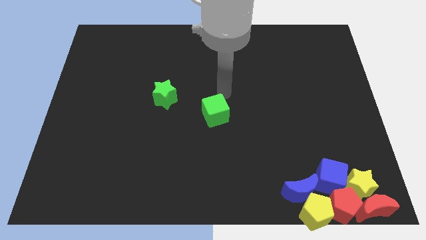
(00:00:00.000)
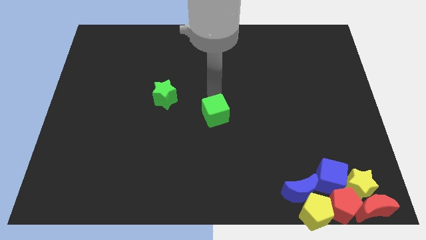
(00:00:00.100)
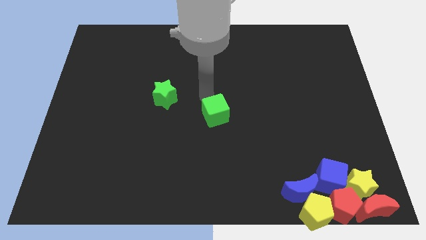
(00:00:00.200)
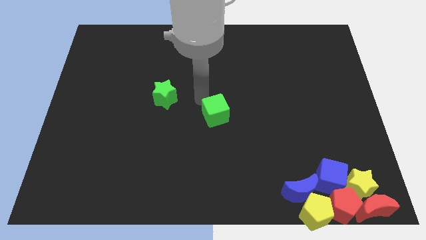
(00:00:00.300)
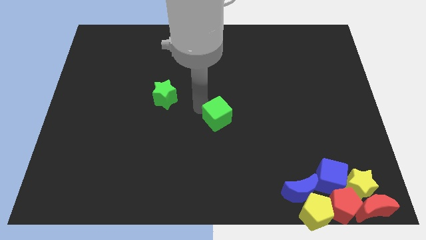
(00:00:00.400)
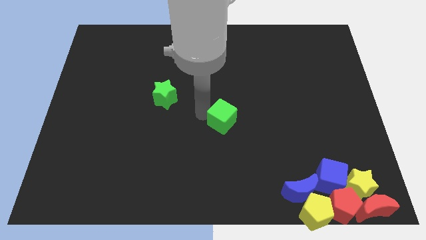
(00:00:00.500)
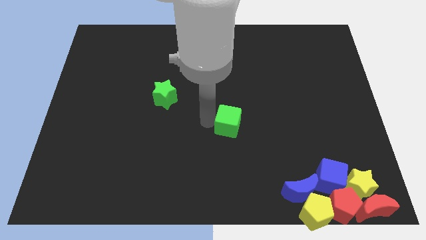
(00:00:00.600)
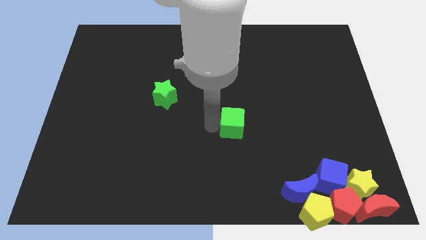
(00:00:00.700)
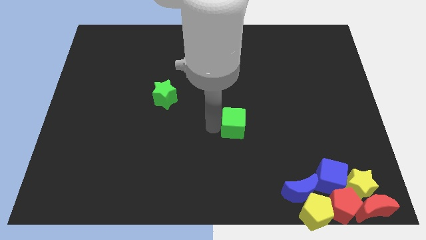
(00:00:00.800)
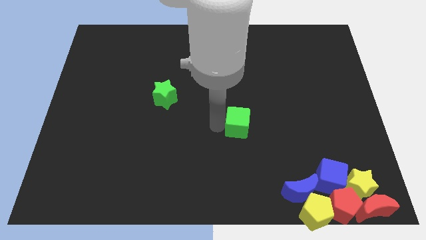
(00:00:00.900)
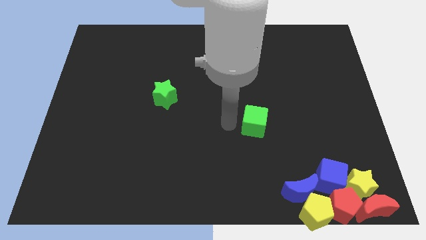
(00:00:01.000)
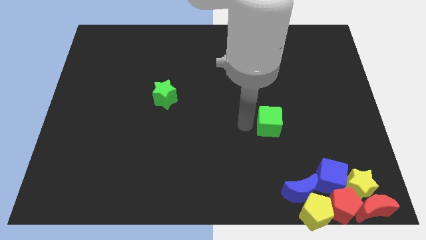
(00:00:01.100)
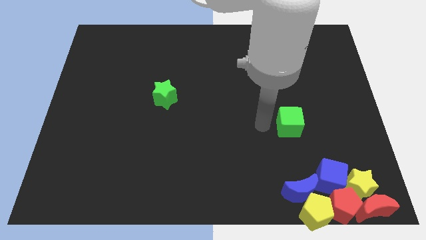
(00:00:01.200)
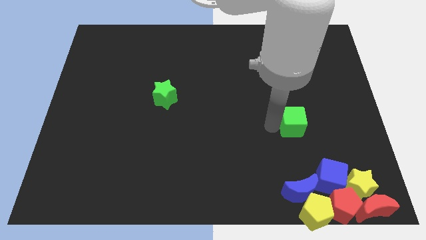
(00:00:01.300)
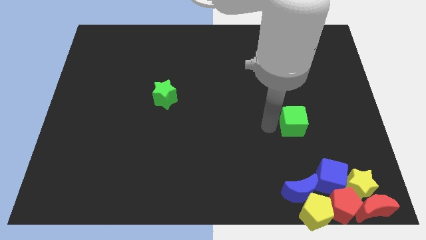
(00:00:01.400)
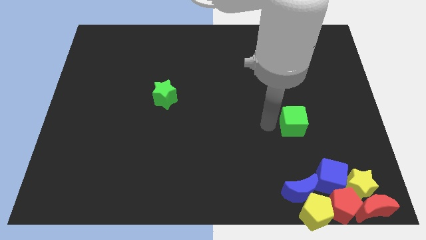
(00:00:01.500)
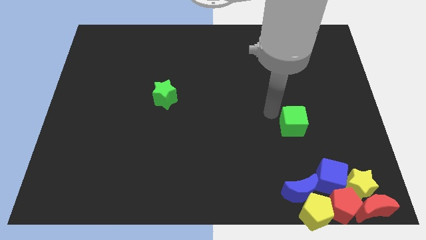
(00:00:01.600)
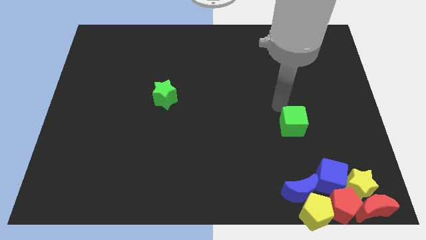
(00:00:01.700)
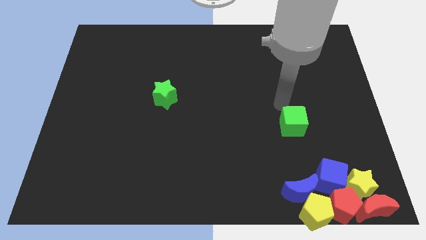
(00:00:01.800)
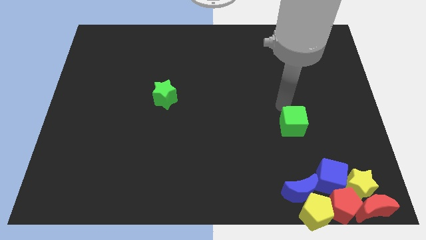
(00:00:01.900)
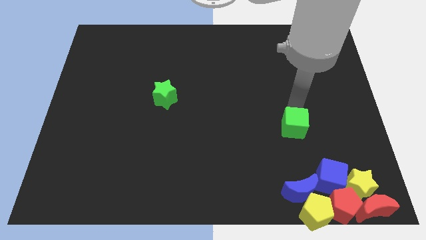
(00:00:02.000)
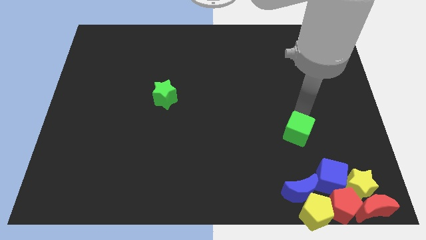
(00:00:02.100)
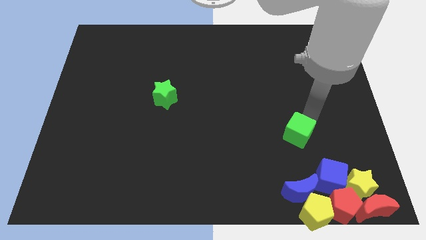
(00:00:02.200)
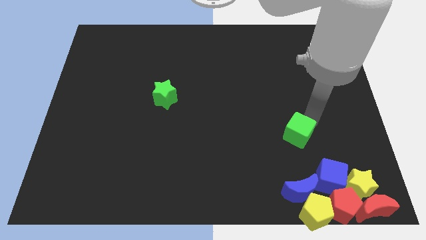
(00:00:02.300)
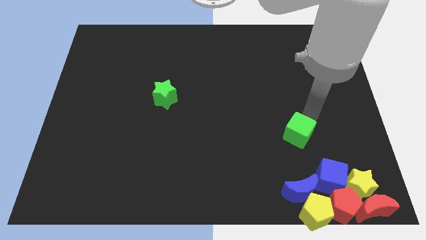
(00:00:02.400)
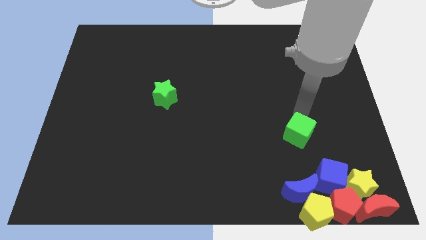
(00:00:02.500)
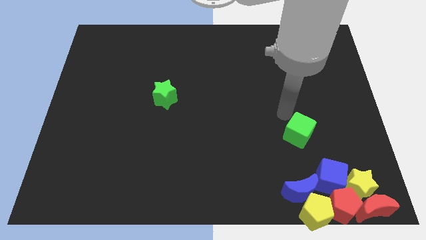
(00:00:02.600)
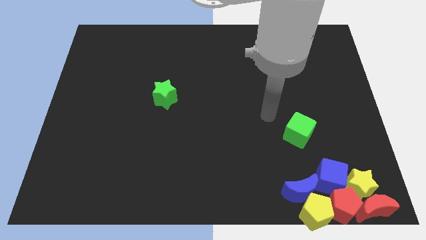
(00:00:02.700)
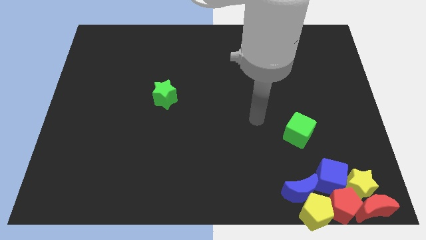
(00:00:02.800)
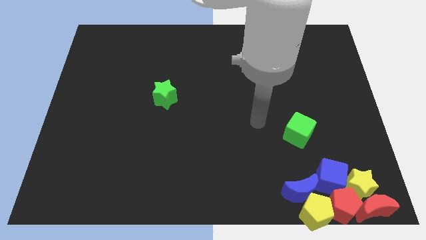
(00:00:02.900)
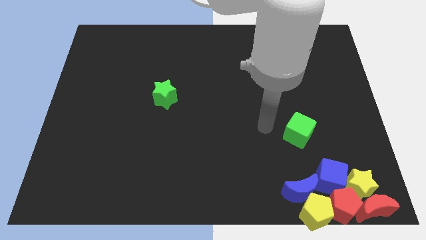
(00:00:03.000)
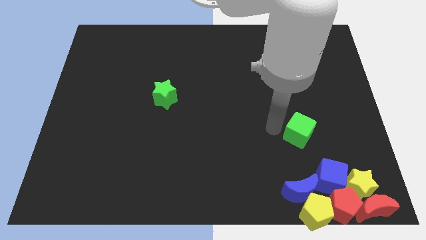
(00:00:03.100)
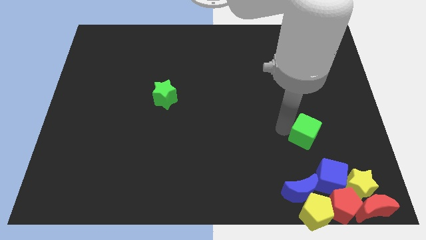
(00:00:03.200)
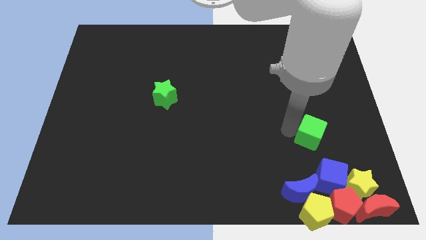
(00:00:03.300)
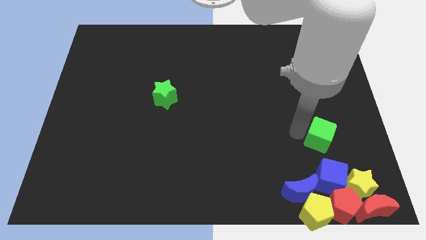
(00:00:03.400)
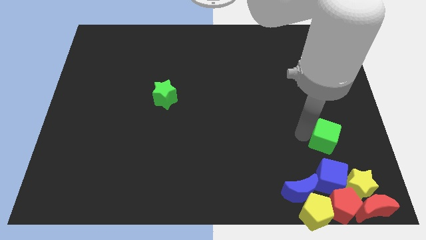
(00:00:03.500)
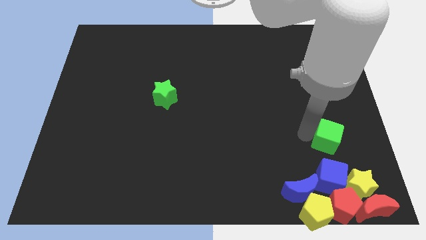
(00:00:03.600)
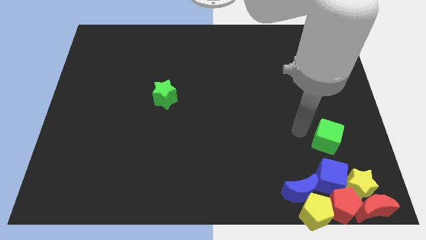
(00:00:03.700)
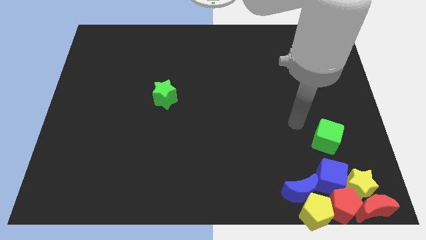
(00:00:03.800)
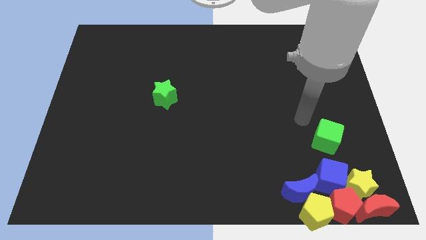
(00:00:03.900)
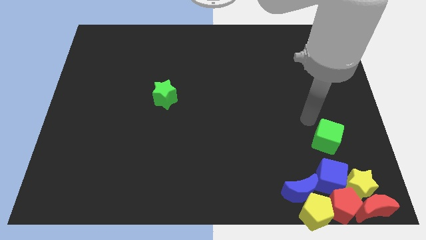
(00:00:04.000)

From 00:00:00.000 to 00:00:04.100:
drag the green cube vertically above the blue cube

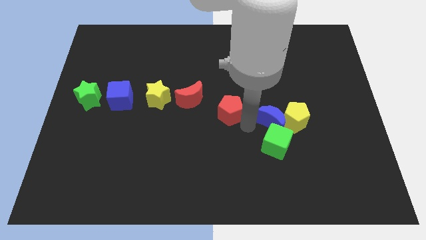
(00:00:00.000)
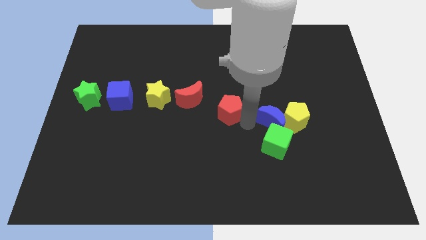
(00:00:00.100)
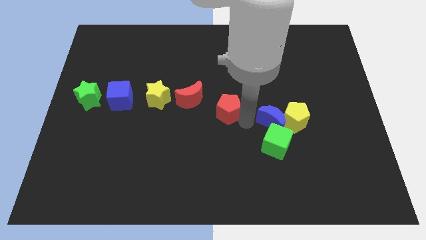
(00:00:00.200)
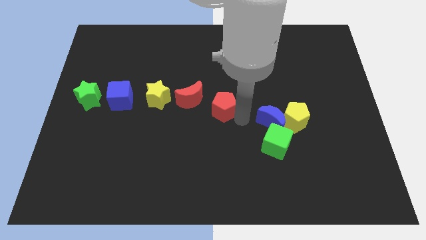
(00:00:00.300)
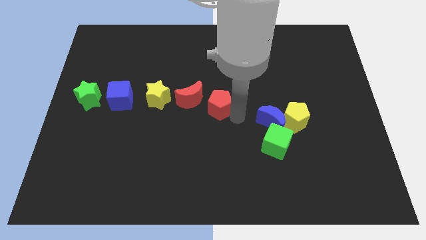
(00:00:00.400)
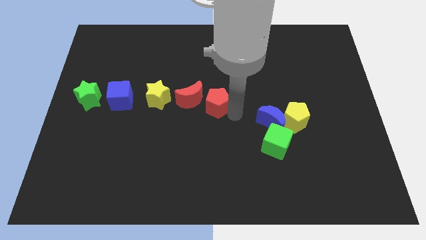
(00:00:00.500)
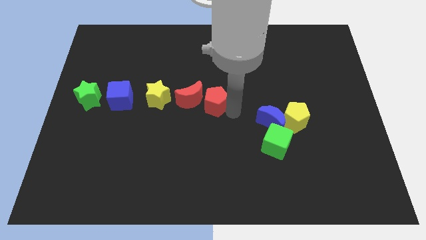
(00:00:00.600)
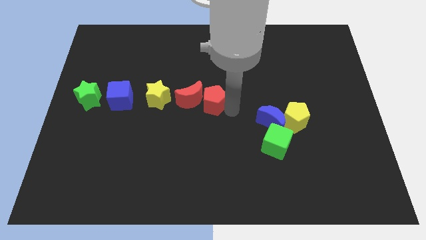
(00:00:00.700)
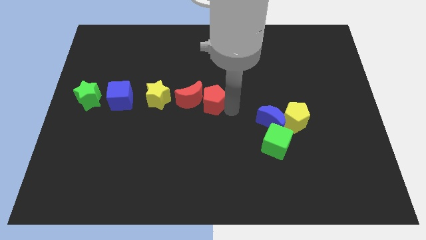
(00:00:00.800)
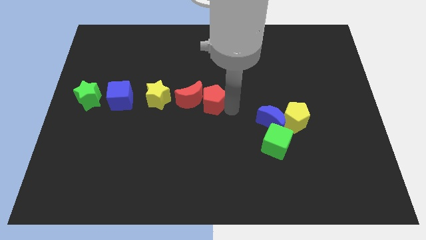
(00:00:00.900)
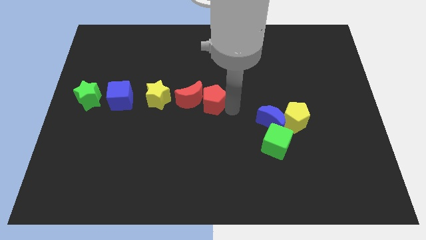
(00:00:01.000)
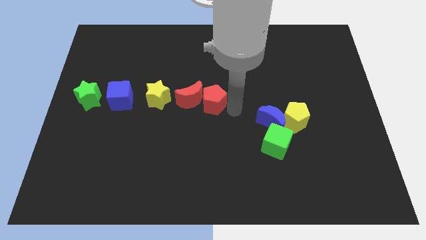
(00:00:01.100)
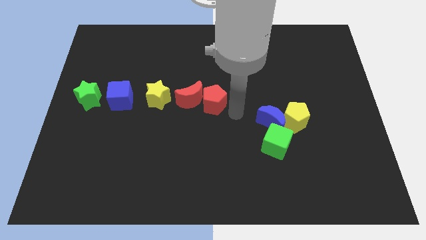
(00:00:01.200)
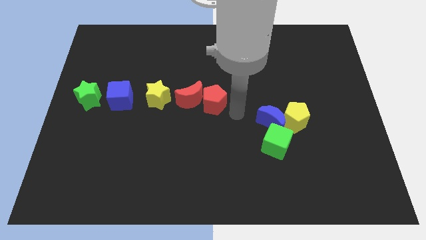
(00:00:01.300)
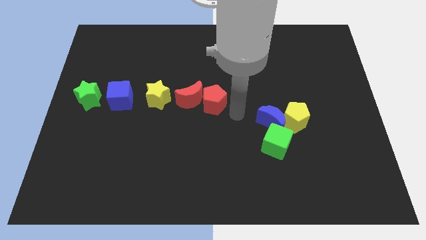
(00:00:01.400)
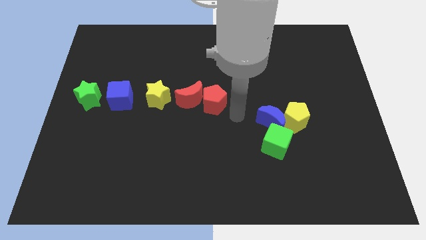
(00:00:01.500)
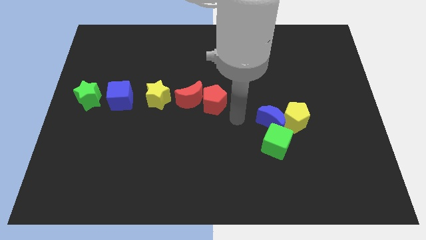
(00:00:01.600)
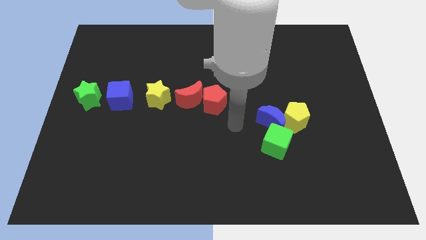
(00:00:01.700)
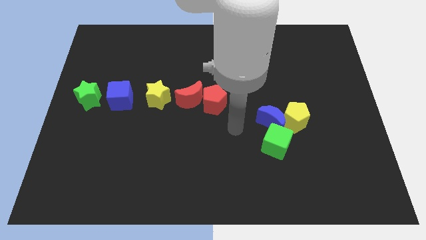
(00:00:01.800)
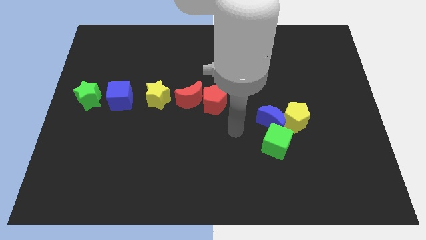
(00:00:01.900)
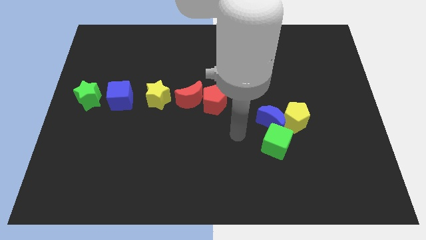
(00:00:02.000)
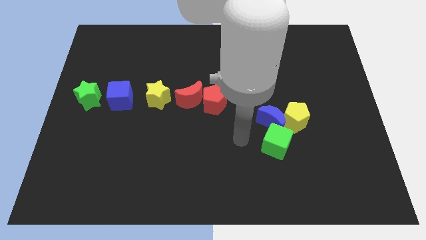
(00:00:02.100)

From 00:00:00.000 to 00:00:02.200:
push the red pentagon to the right side of the red crescent

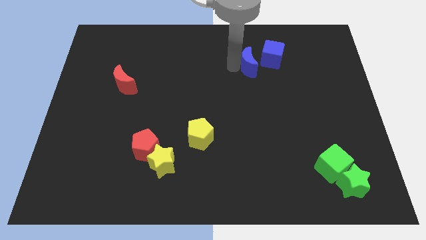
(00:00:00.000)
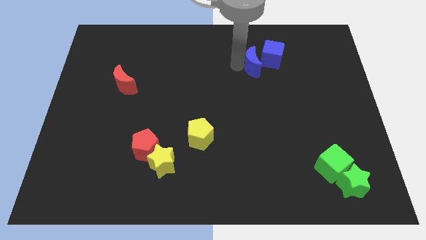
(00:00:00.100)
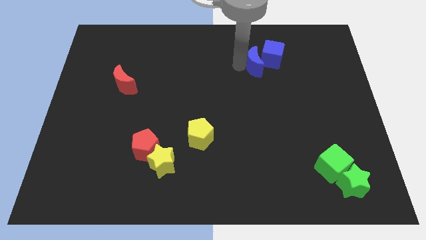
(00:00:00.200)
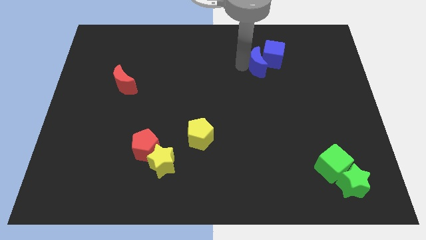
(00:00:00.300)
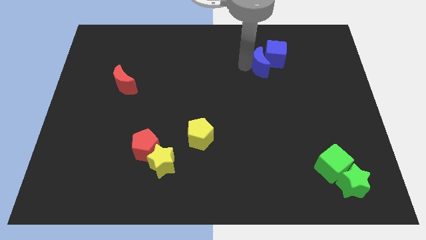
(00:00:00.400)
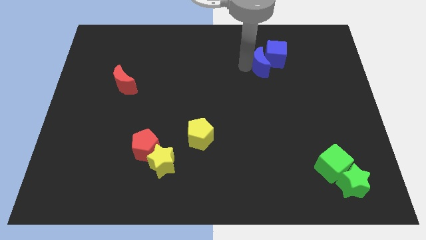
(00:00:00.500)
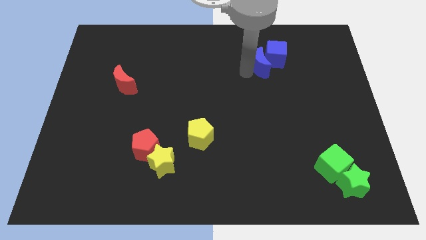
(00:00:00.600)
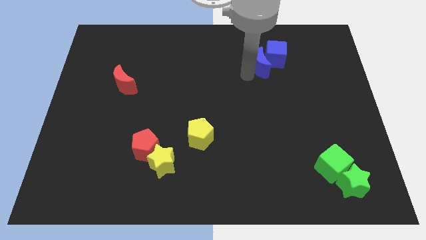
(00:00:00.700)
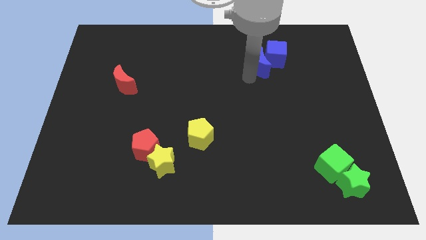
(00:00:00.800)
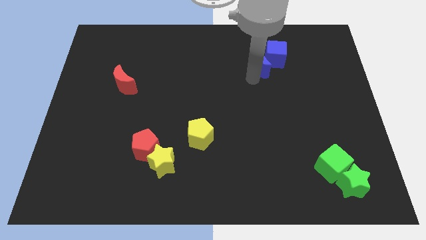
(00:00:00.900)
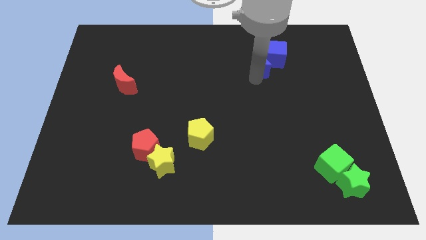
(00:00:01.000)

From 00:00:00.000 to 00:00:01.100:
push the blue moon into the blue cube

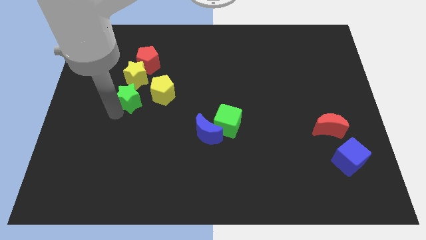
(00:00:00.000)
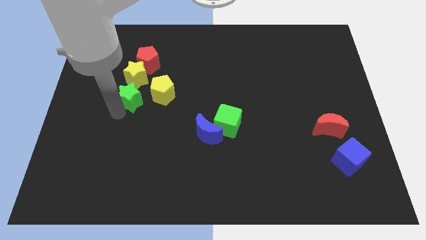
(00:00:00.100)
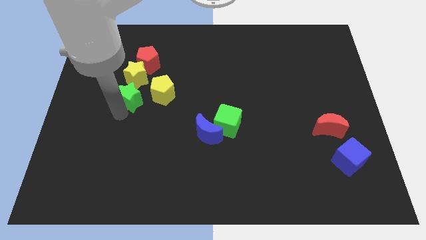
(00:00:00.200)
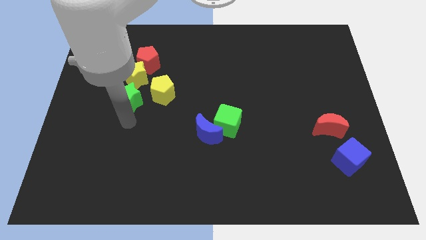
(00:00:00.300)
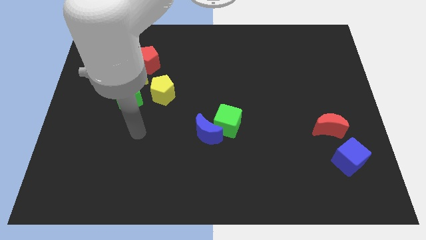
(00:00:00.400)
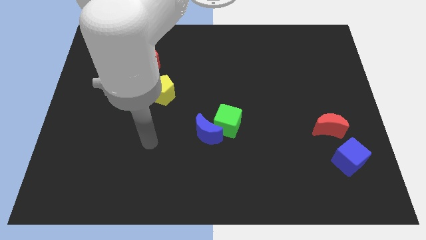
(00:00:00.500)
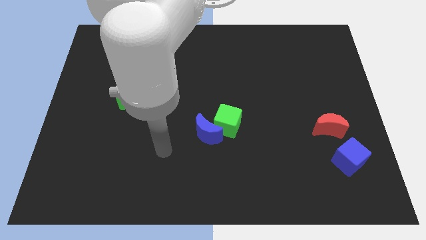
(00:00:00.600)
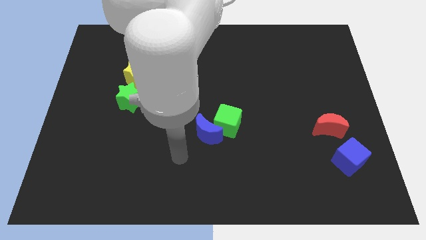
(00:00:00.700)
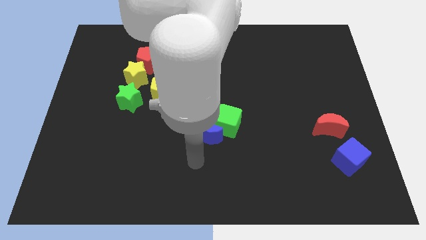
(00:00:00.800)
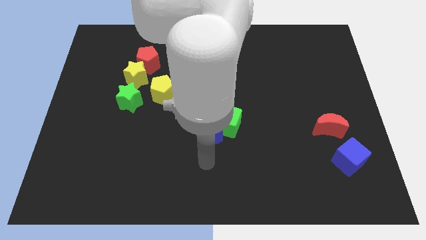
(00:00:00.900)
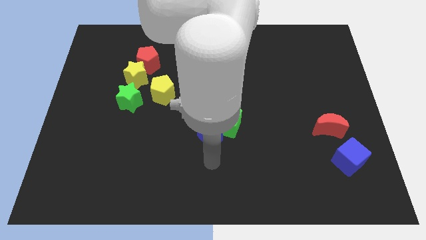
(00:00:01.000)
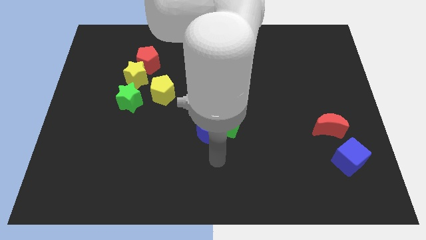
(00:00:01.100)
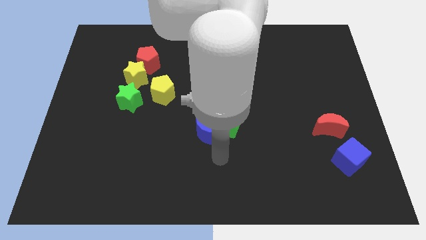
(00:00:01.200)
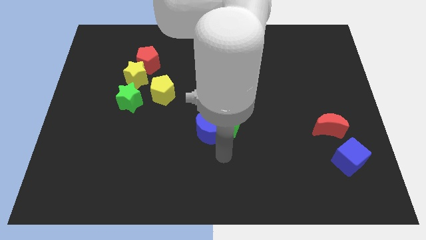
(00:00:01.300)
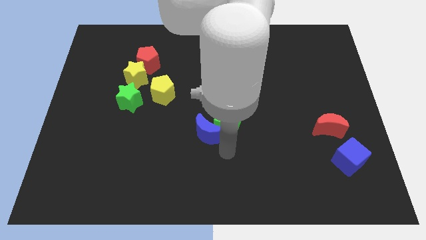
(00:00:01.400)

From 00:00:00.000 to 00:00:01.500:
move the arm away from the green star
